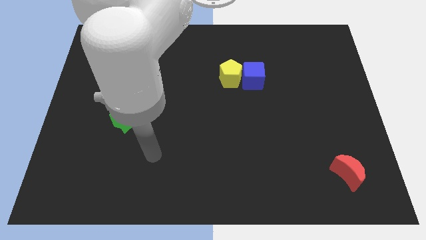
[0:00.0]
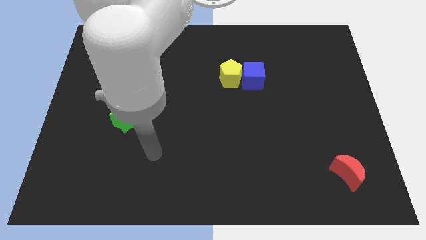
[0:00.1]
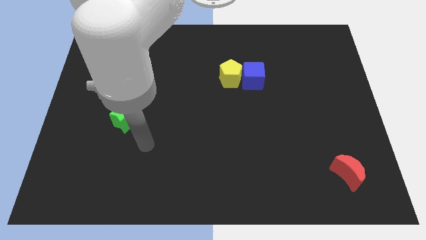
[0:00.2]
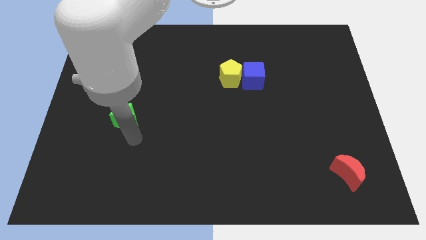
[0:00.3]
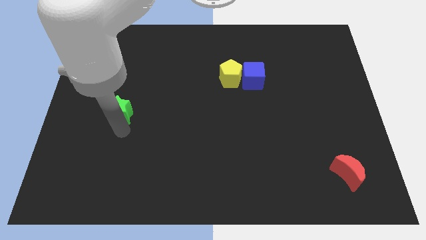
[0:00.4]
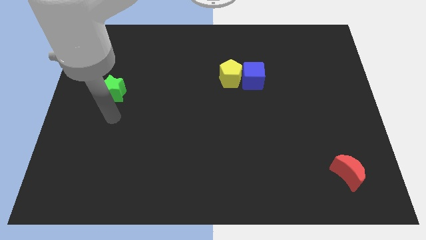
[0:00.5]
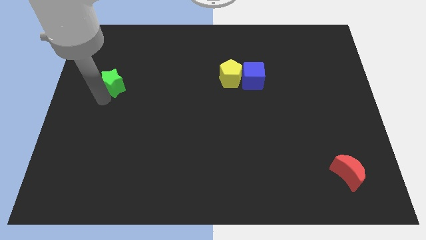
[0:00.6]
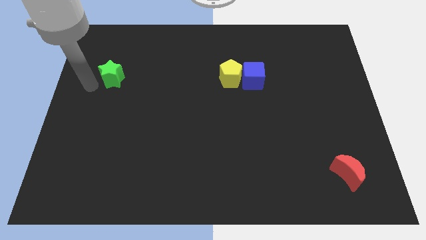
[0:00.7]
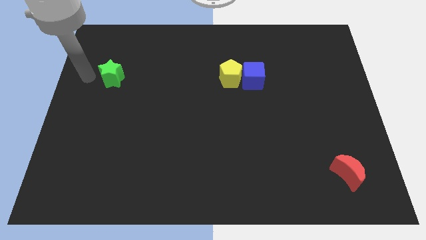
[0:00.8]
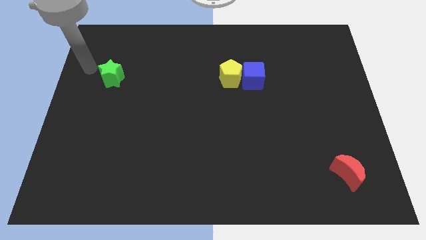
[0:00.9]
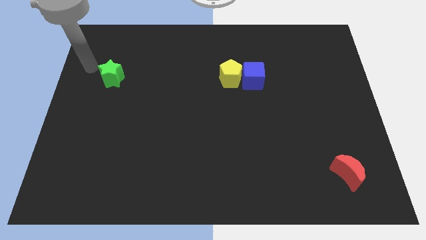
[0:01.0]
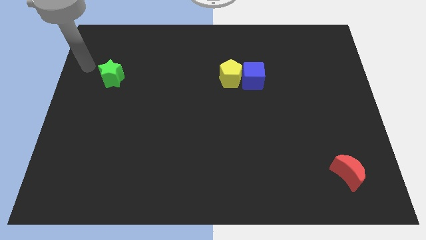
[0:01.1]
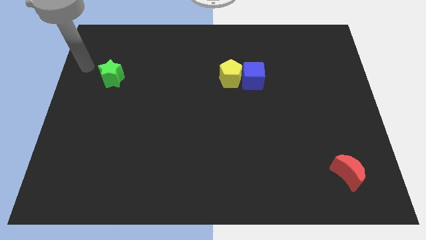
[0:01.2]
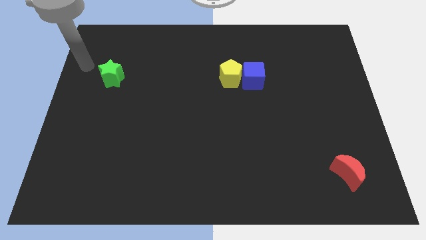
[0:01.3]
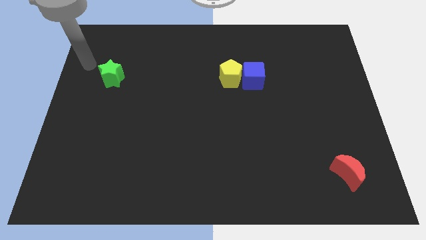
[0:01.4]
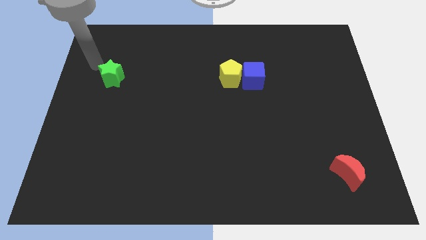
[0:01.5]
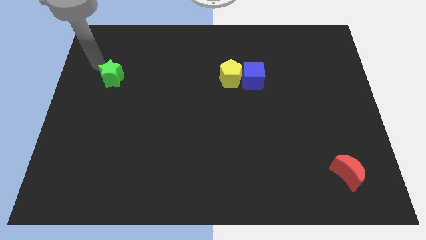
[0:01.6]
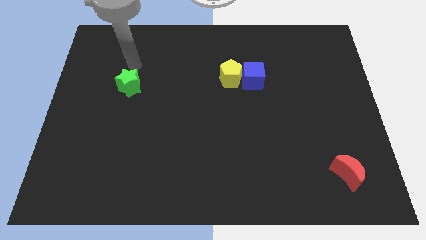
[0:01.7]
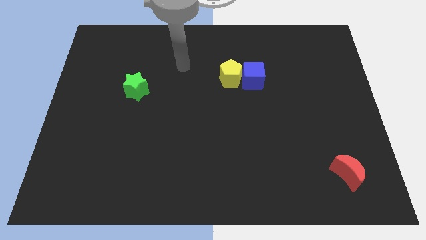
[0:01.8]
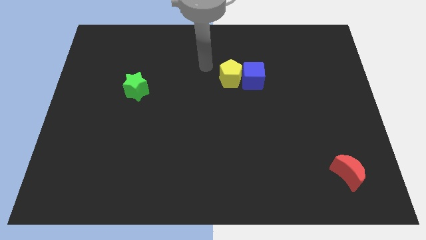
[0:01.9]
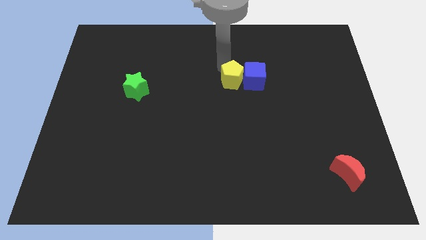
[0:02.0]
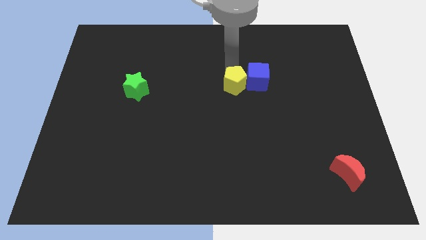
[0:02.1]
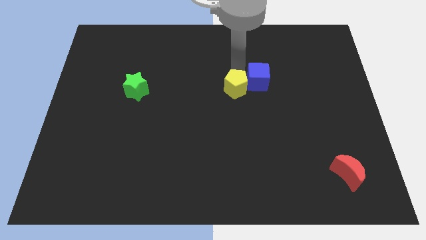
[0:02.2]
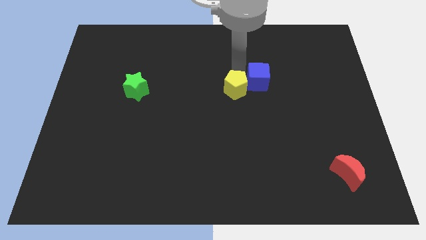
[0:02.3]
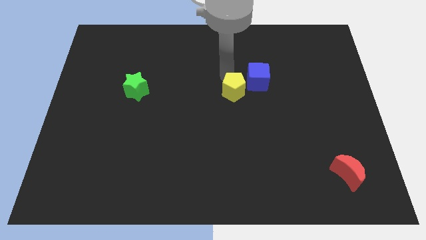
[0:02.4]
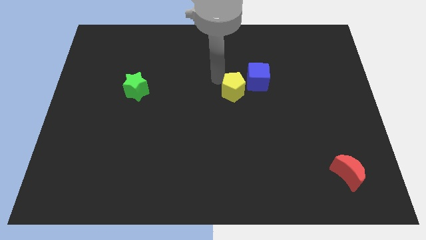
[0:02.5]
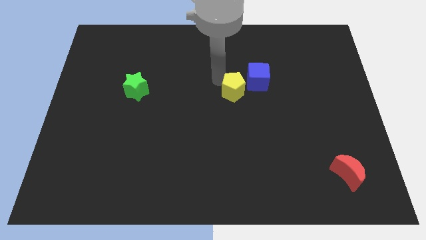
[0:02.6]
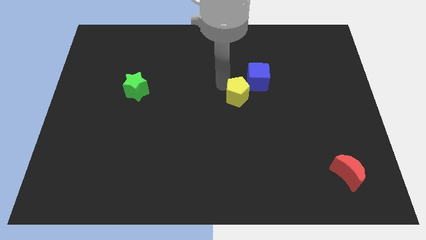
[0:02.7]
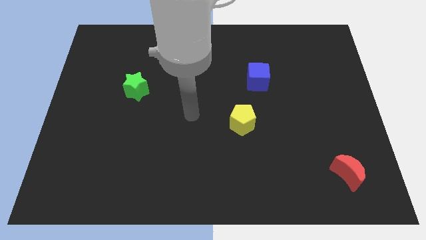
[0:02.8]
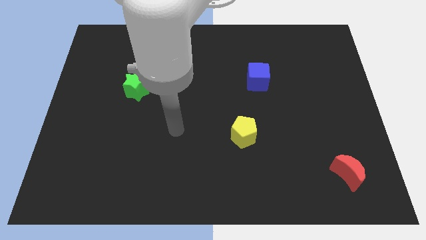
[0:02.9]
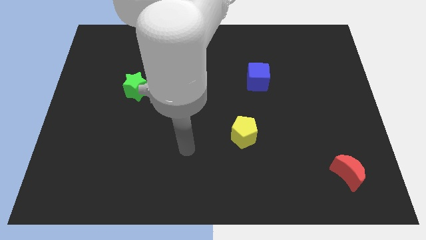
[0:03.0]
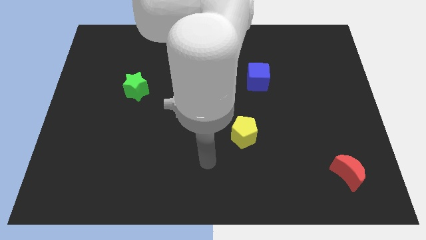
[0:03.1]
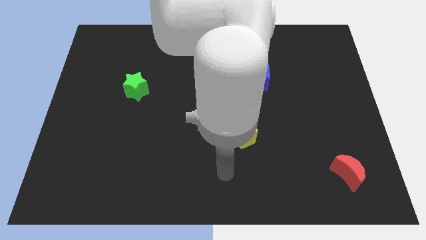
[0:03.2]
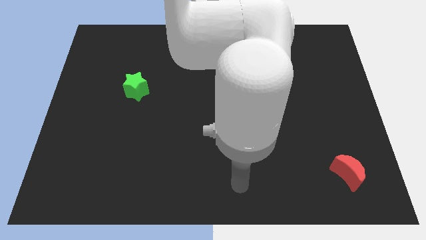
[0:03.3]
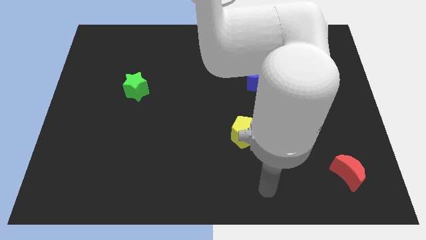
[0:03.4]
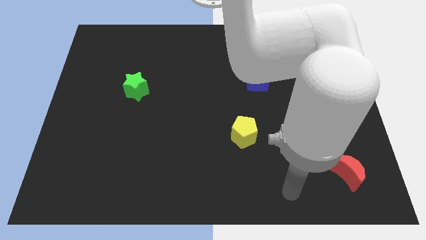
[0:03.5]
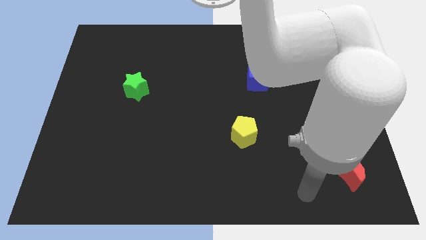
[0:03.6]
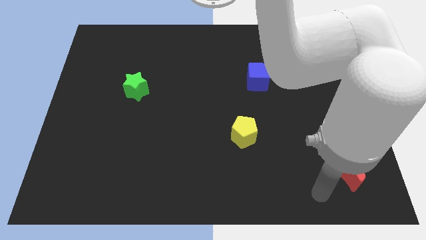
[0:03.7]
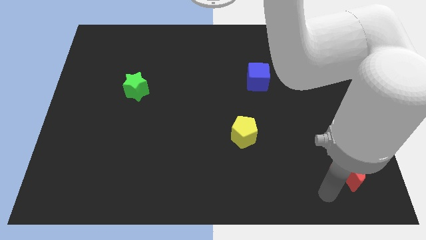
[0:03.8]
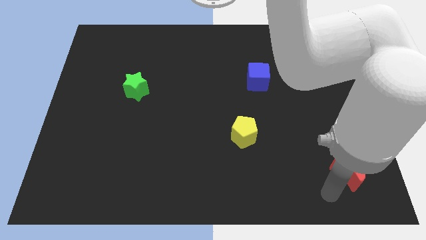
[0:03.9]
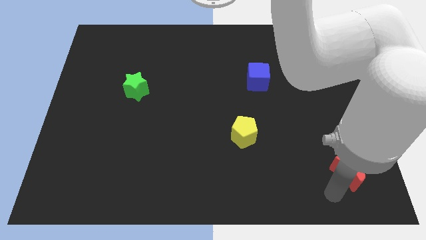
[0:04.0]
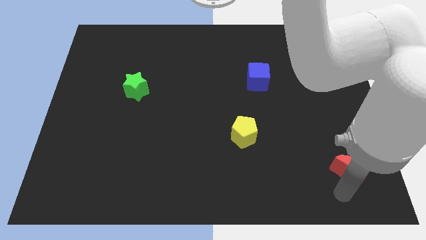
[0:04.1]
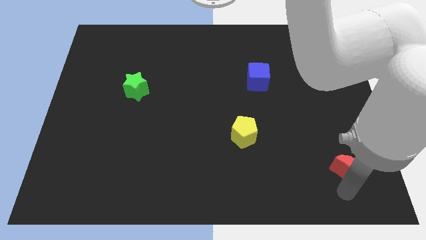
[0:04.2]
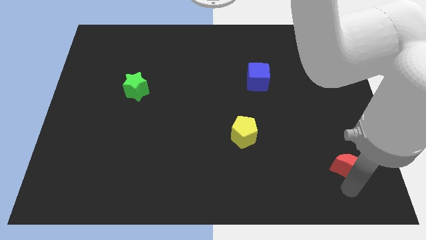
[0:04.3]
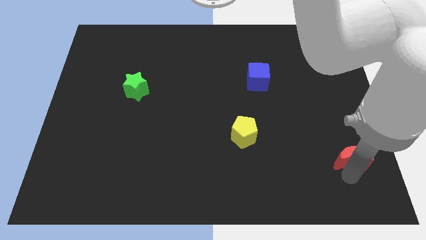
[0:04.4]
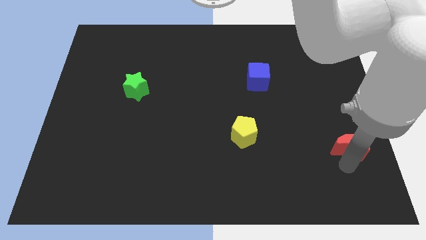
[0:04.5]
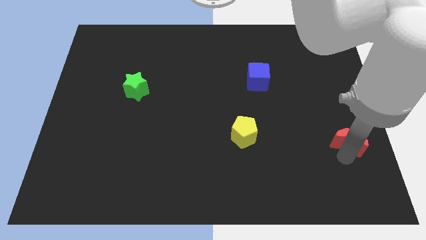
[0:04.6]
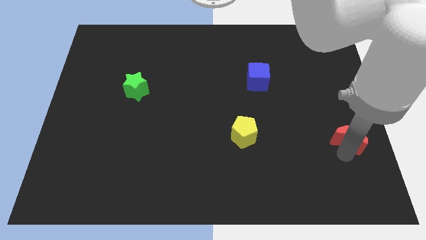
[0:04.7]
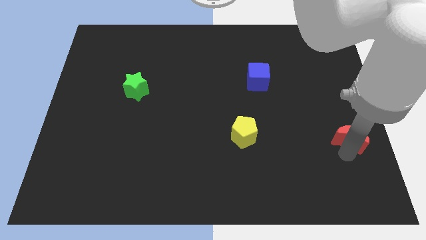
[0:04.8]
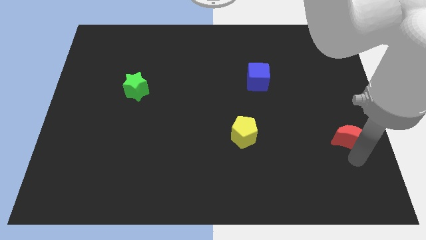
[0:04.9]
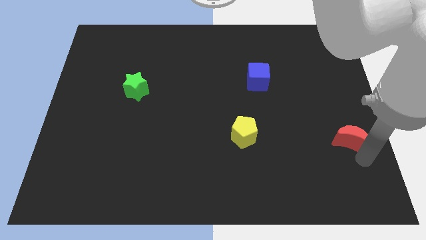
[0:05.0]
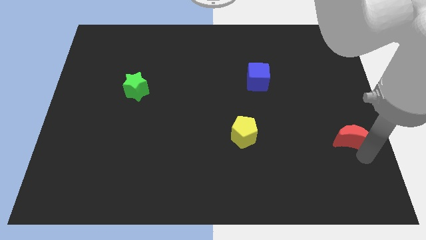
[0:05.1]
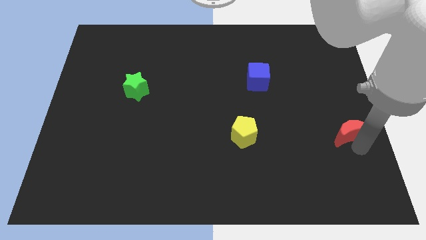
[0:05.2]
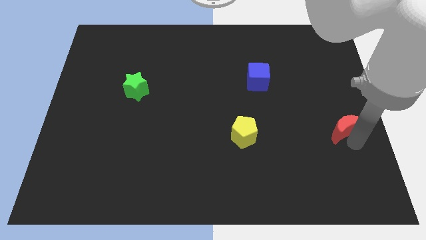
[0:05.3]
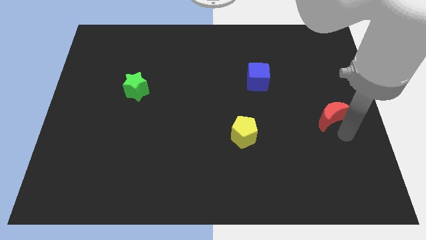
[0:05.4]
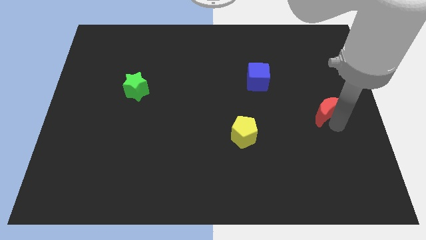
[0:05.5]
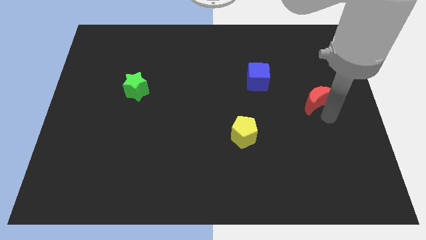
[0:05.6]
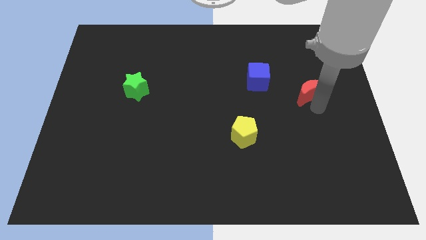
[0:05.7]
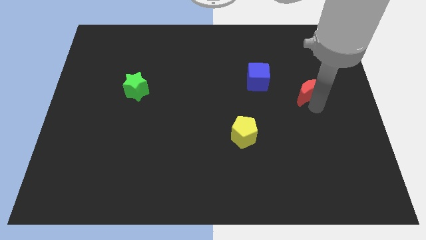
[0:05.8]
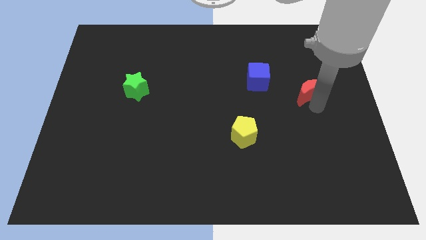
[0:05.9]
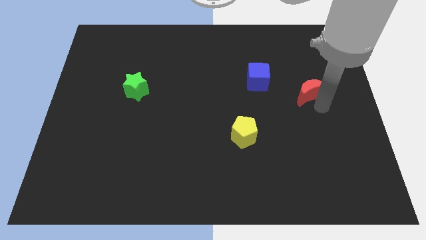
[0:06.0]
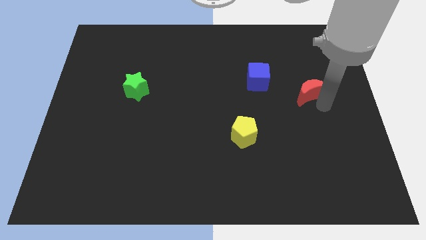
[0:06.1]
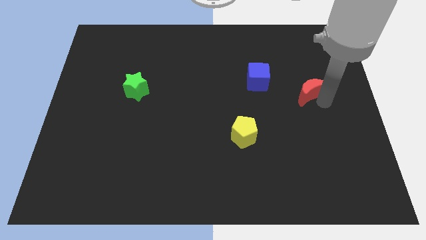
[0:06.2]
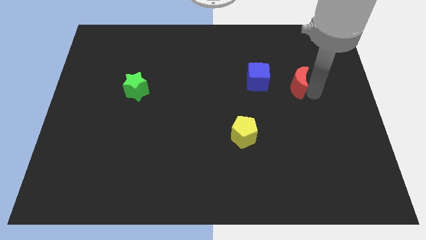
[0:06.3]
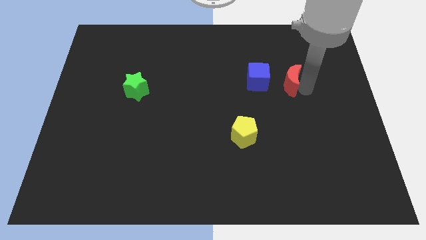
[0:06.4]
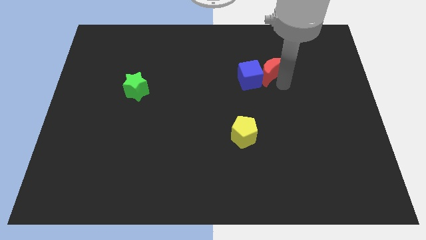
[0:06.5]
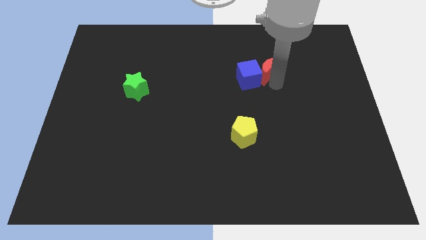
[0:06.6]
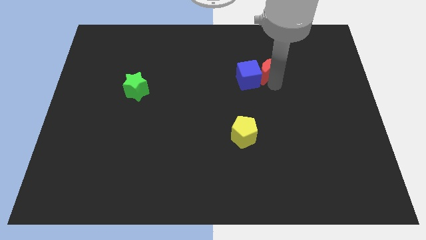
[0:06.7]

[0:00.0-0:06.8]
slide the red moon next to the cube

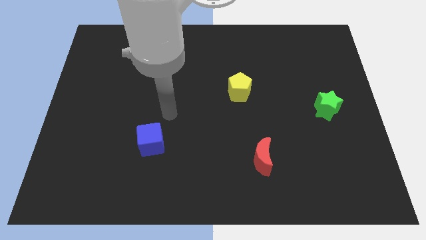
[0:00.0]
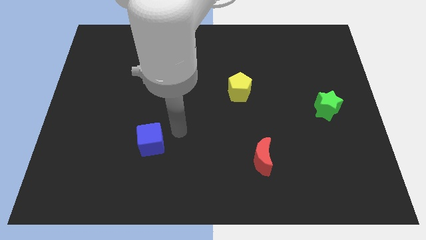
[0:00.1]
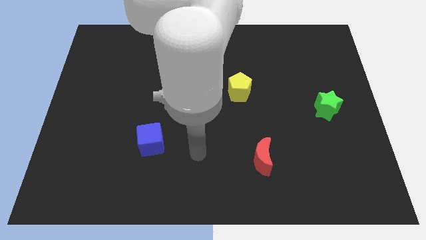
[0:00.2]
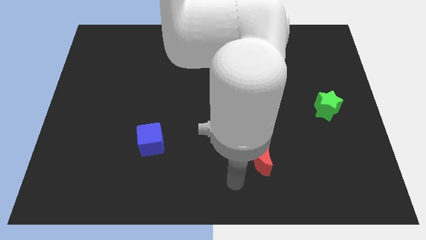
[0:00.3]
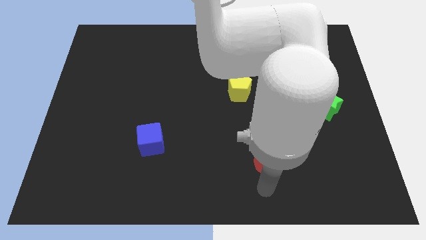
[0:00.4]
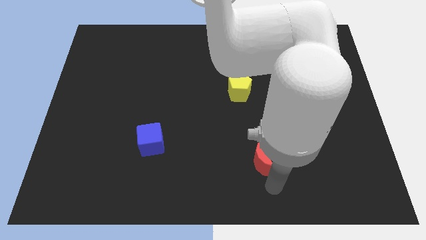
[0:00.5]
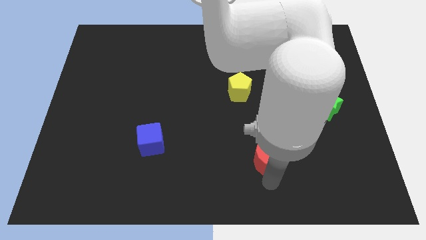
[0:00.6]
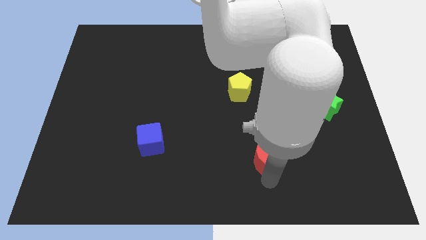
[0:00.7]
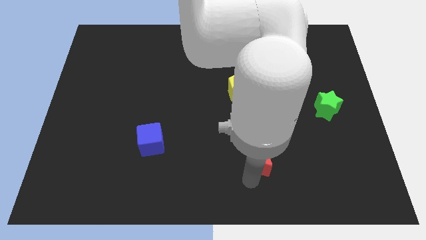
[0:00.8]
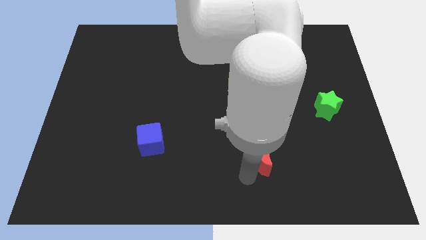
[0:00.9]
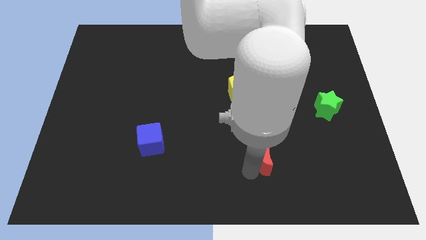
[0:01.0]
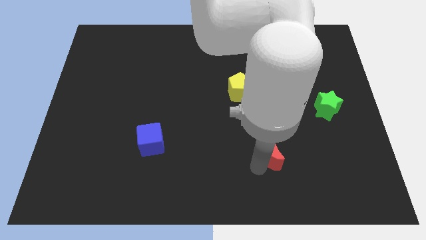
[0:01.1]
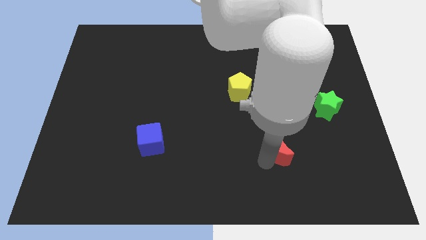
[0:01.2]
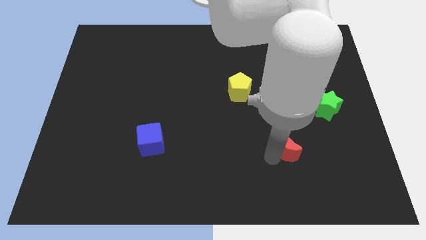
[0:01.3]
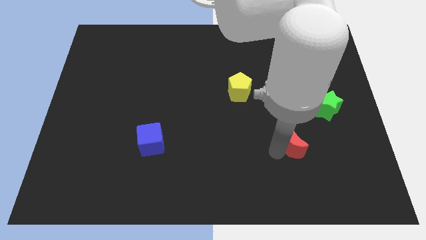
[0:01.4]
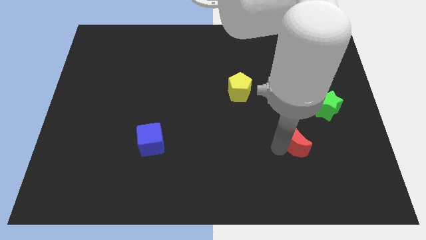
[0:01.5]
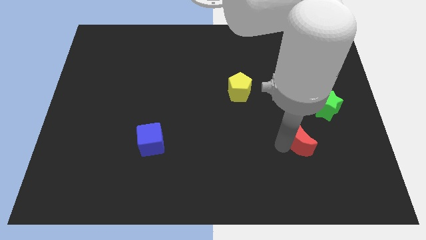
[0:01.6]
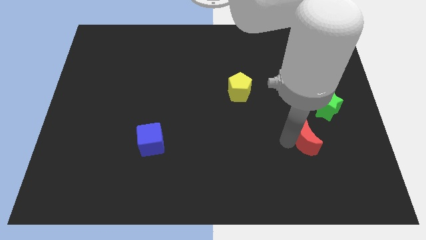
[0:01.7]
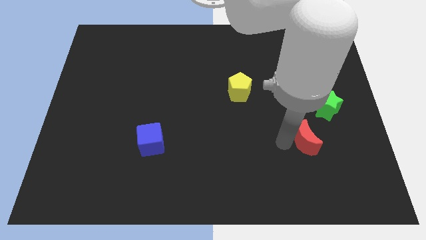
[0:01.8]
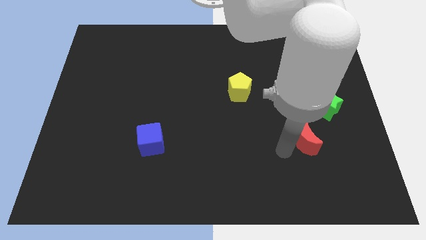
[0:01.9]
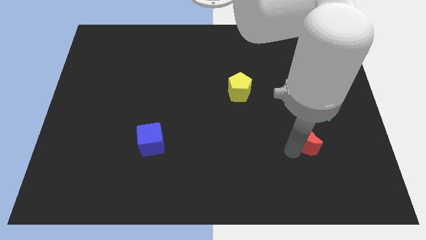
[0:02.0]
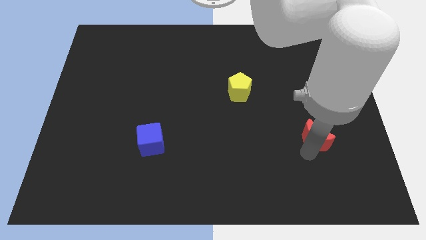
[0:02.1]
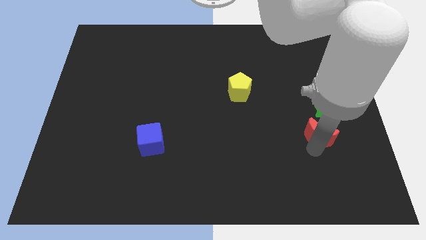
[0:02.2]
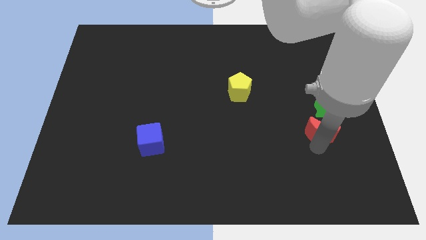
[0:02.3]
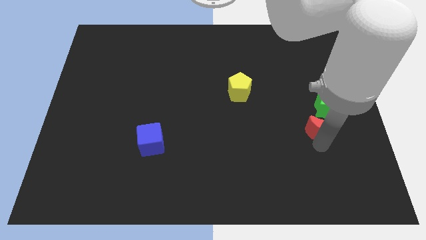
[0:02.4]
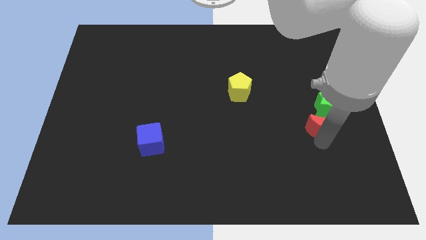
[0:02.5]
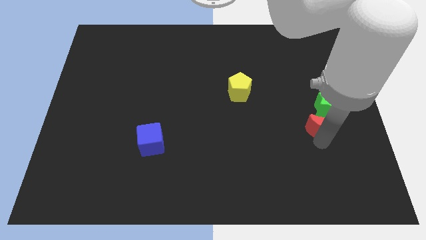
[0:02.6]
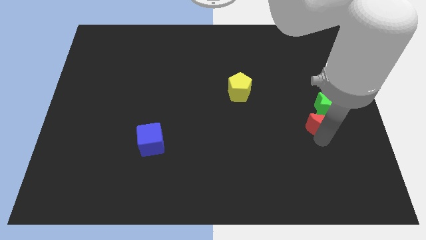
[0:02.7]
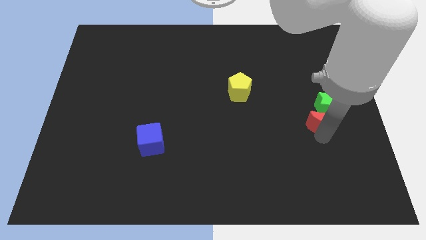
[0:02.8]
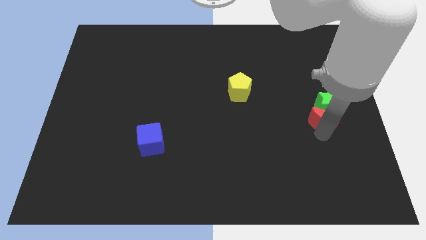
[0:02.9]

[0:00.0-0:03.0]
slide the red block close to the star
